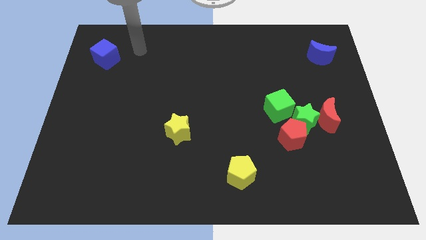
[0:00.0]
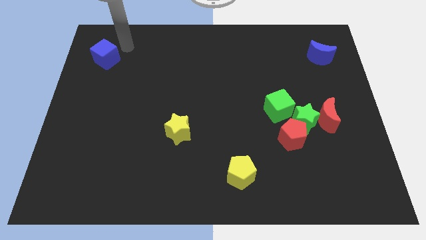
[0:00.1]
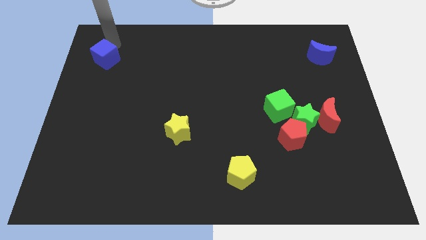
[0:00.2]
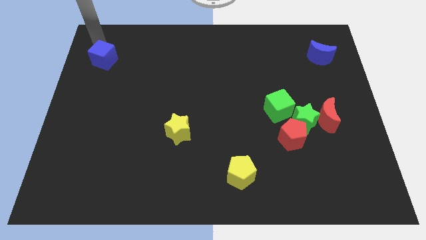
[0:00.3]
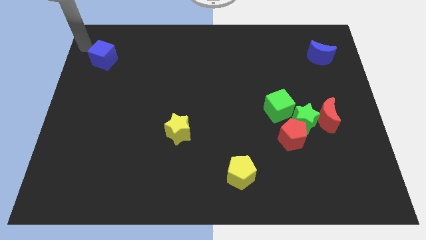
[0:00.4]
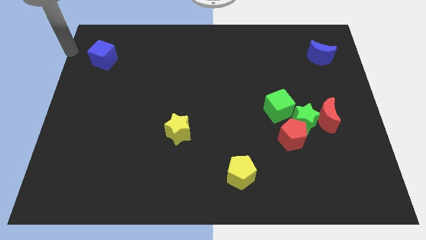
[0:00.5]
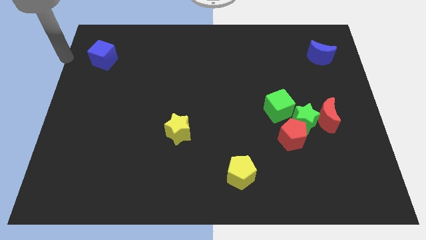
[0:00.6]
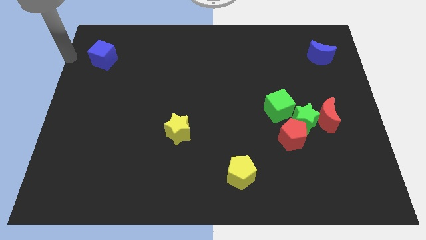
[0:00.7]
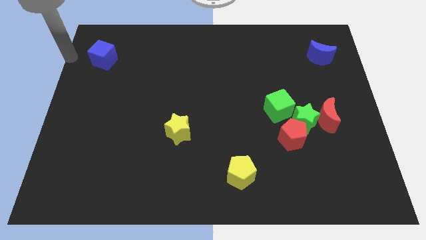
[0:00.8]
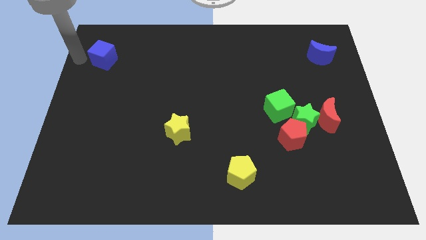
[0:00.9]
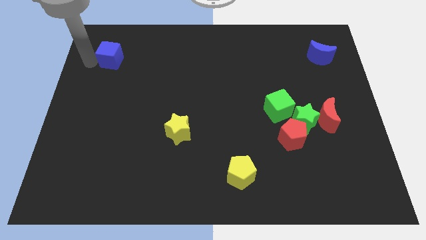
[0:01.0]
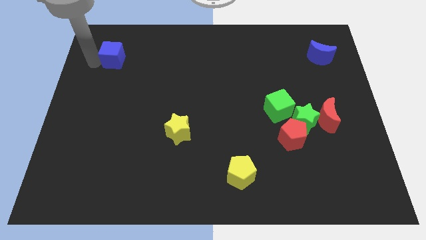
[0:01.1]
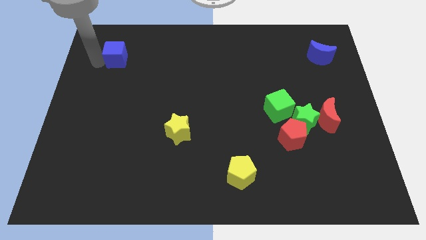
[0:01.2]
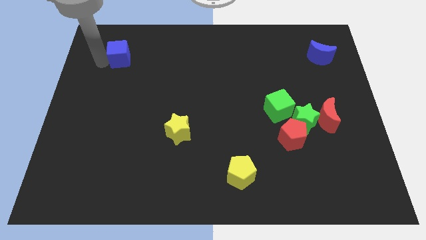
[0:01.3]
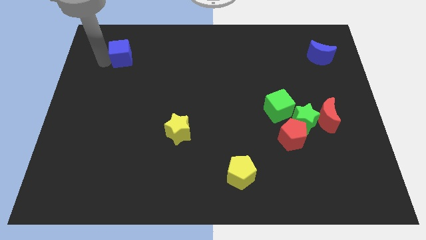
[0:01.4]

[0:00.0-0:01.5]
push blue cube slightly towards right

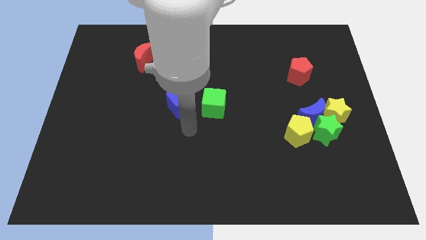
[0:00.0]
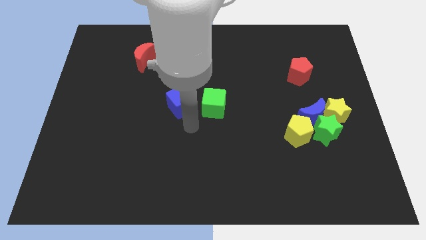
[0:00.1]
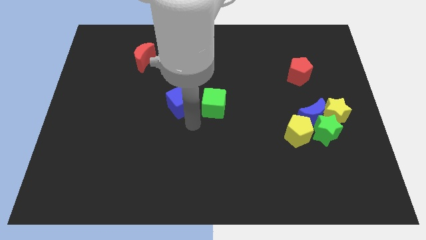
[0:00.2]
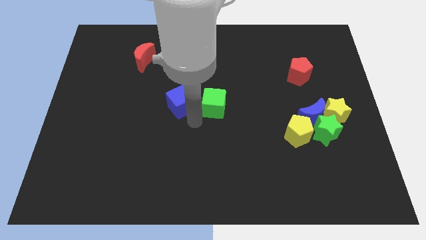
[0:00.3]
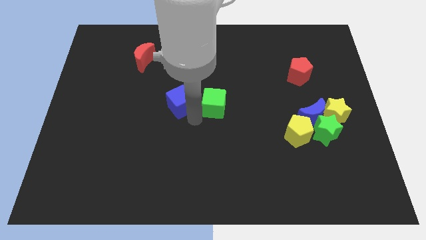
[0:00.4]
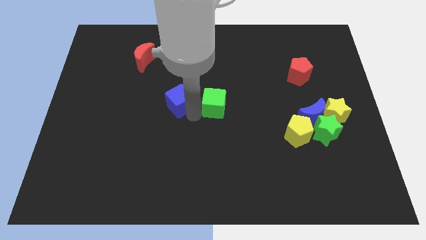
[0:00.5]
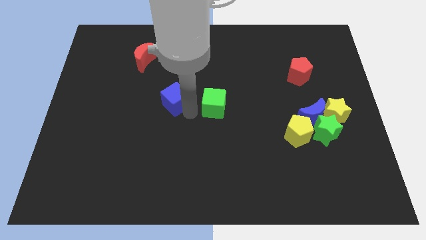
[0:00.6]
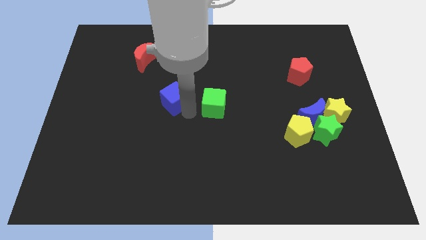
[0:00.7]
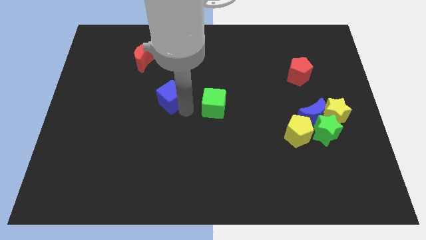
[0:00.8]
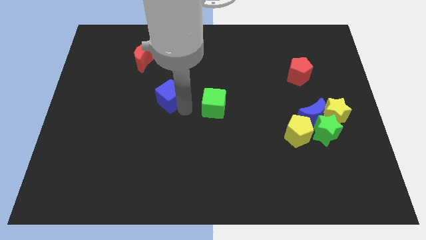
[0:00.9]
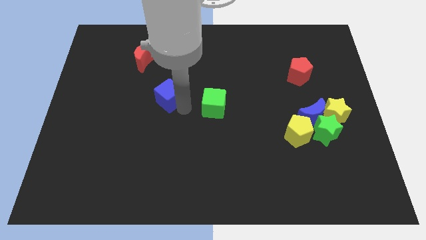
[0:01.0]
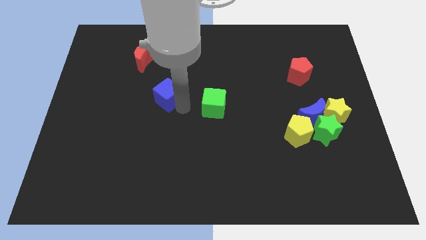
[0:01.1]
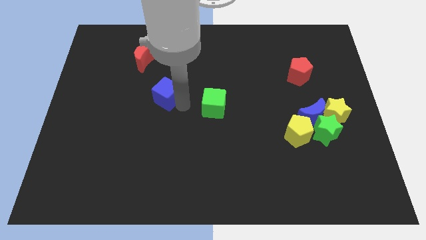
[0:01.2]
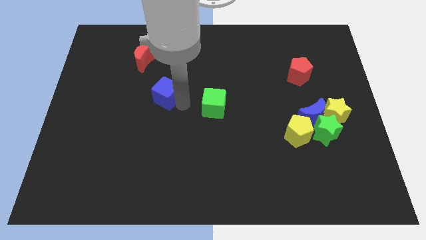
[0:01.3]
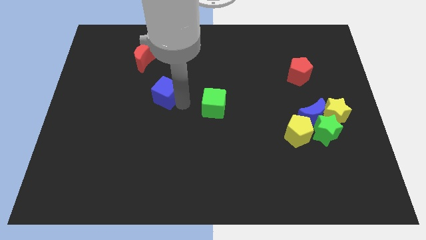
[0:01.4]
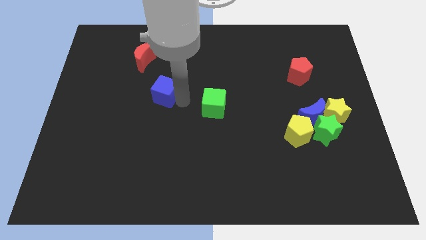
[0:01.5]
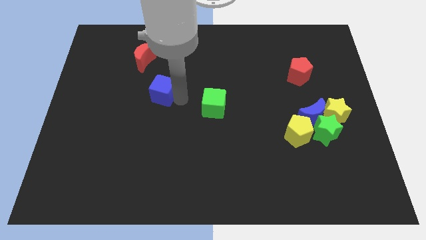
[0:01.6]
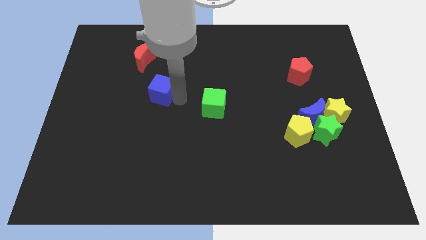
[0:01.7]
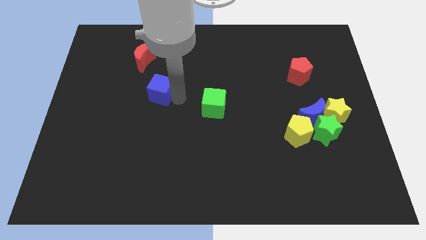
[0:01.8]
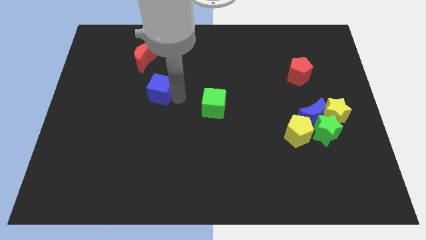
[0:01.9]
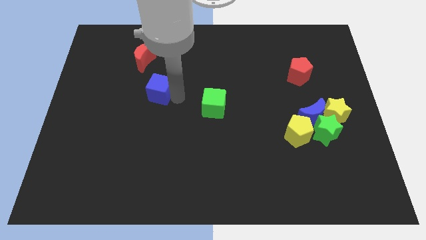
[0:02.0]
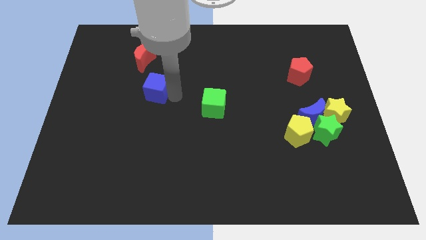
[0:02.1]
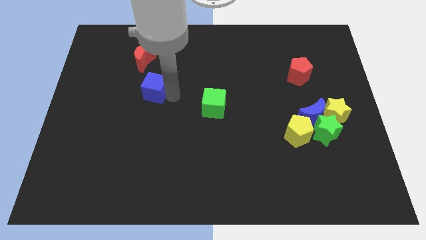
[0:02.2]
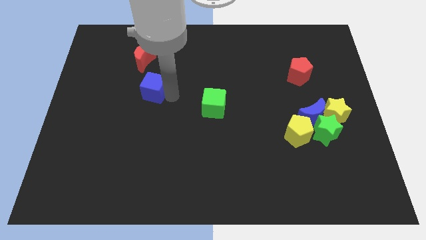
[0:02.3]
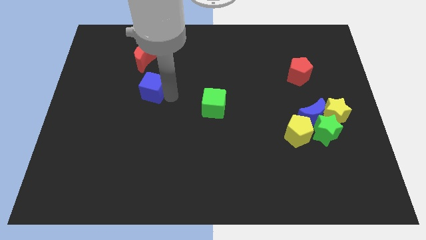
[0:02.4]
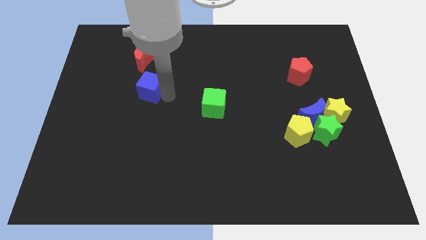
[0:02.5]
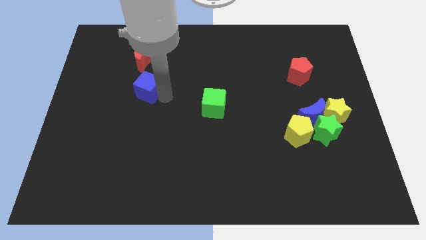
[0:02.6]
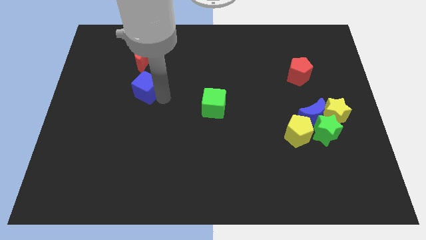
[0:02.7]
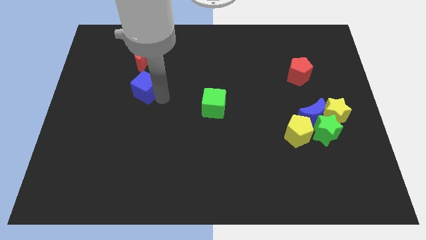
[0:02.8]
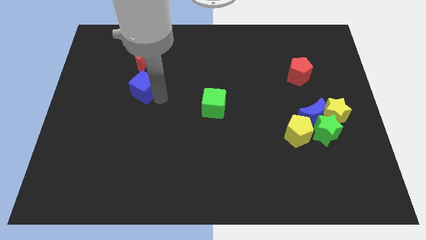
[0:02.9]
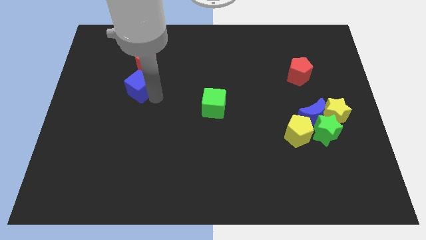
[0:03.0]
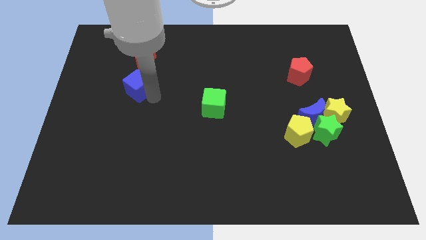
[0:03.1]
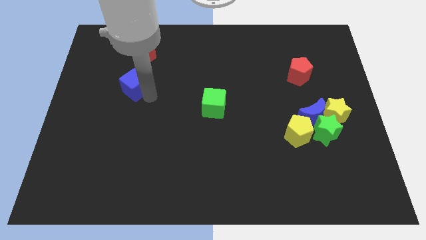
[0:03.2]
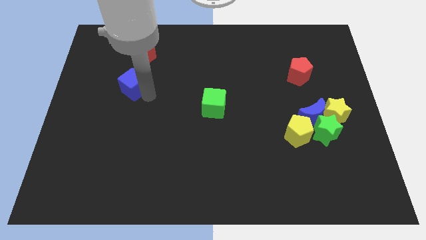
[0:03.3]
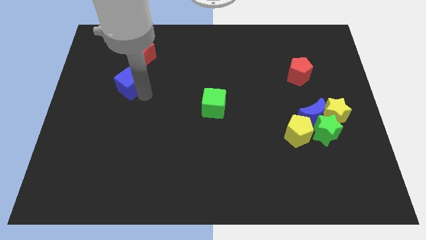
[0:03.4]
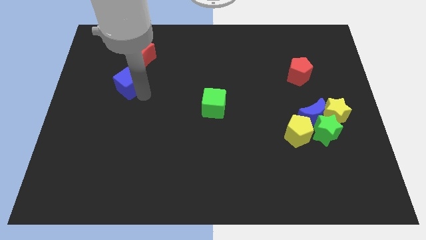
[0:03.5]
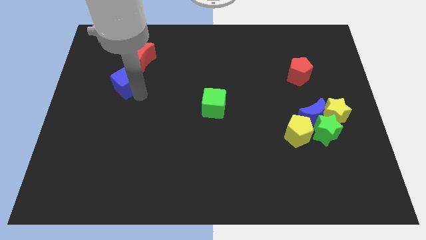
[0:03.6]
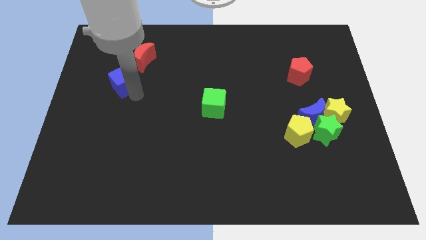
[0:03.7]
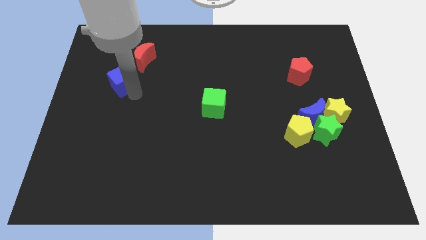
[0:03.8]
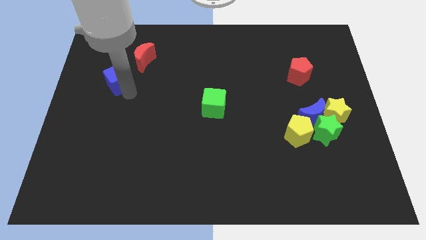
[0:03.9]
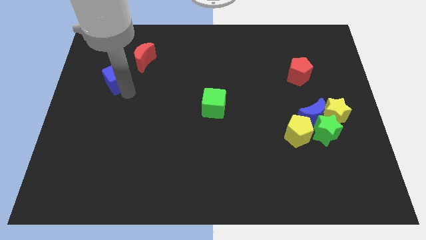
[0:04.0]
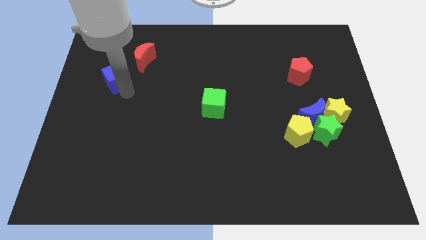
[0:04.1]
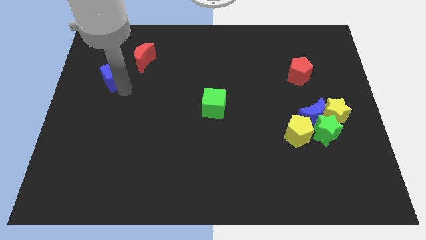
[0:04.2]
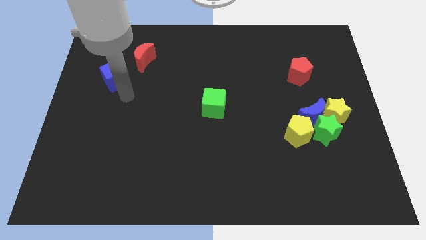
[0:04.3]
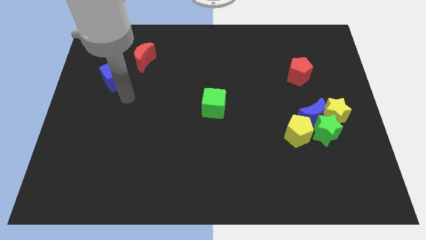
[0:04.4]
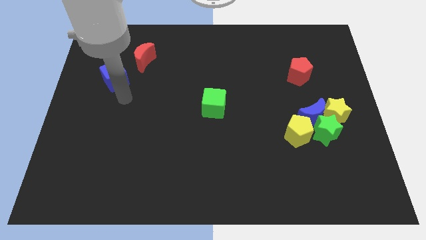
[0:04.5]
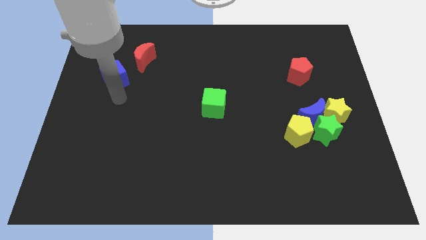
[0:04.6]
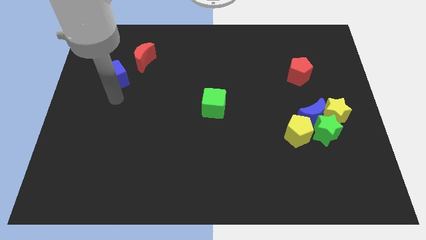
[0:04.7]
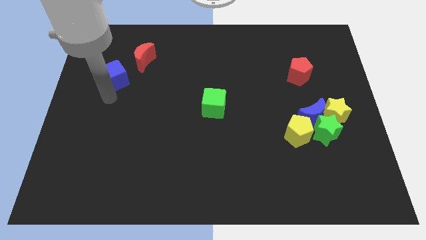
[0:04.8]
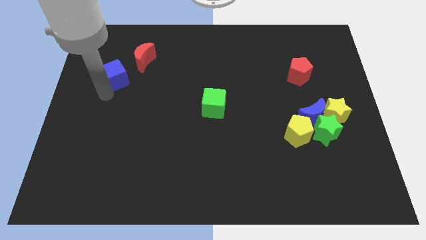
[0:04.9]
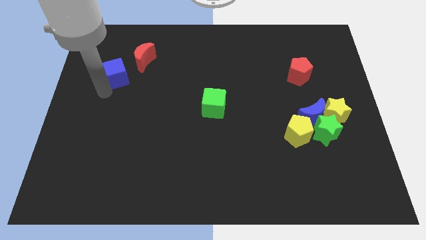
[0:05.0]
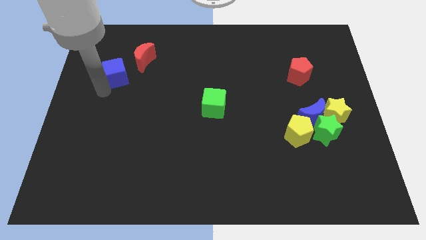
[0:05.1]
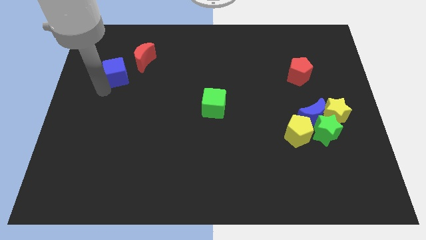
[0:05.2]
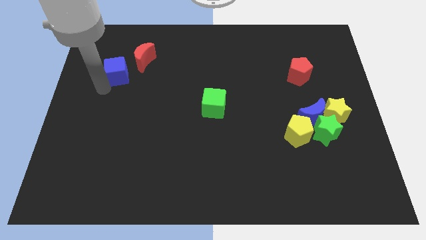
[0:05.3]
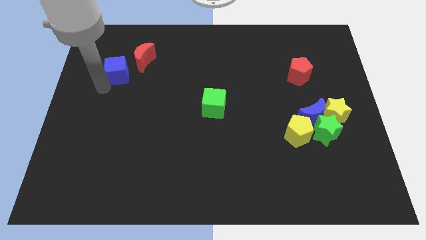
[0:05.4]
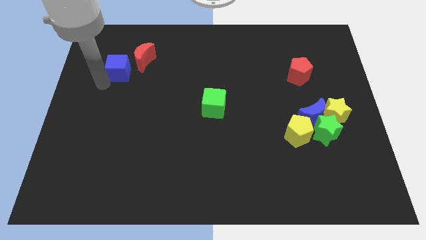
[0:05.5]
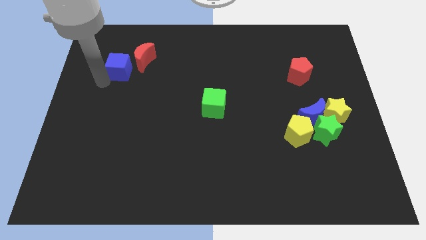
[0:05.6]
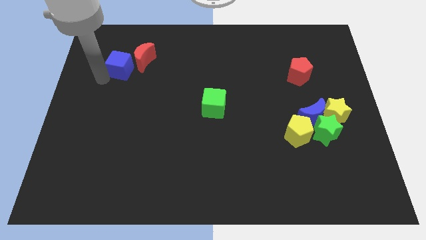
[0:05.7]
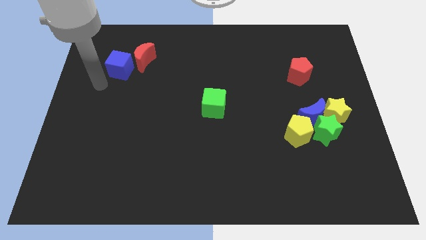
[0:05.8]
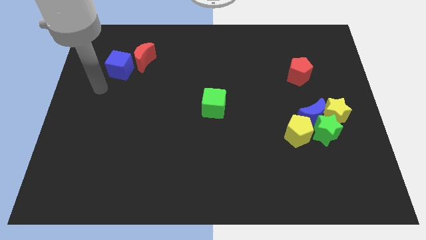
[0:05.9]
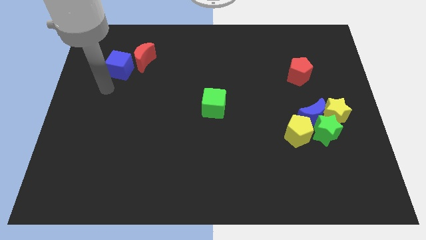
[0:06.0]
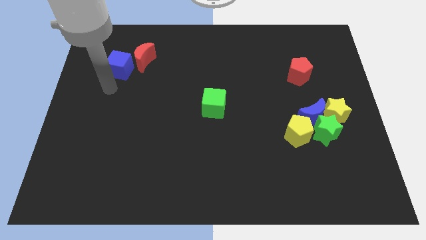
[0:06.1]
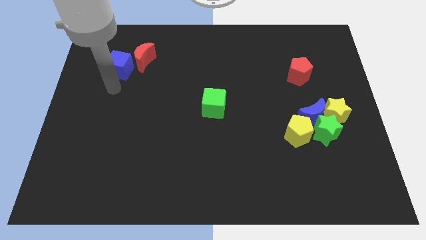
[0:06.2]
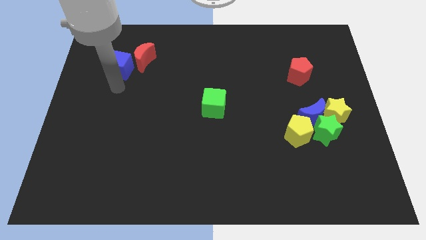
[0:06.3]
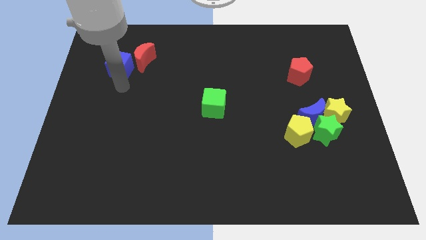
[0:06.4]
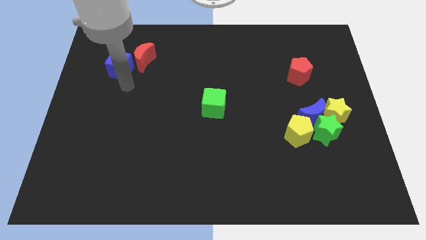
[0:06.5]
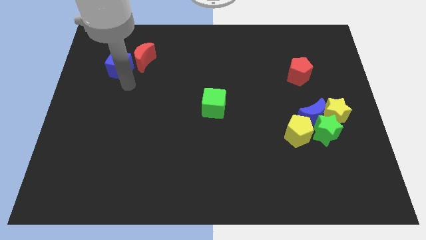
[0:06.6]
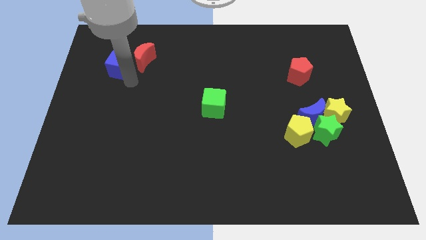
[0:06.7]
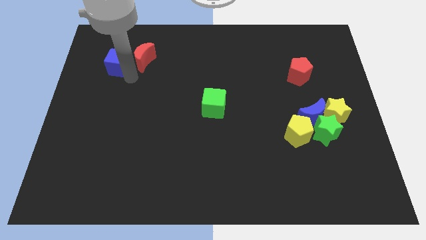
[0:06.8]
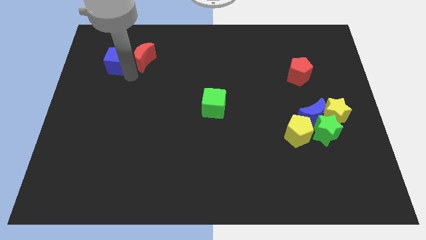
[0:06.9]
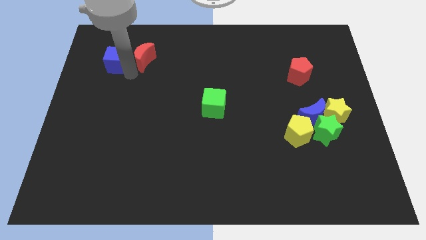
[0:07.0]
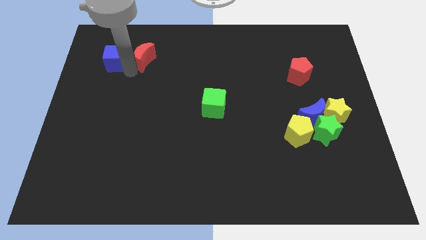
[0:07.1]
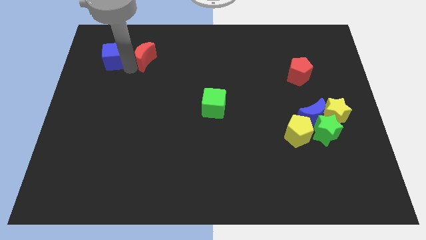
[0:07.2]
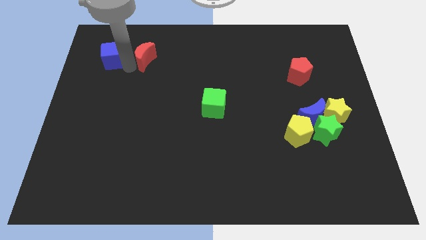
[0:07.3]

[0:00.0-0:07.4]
place the blue cube left to the red moon
